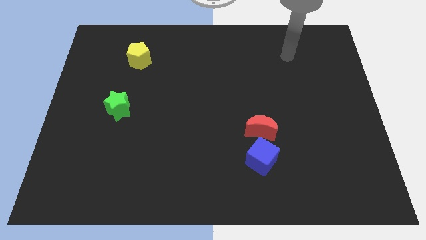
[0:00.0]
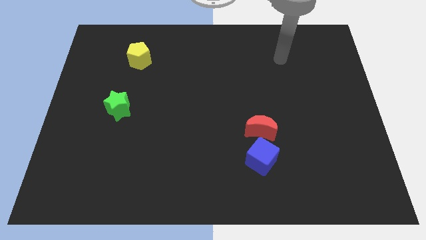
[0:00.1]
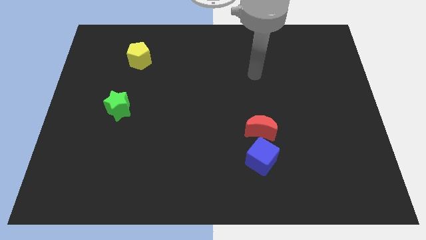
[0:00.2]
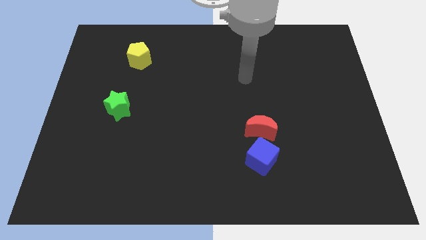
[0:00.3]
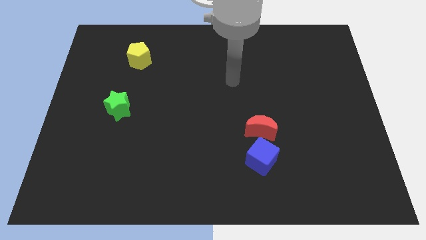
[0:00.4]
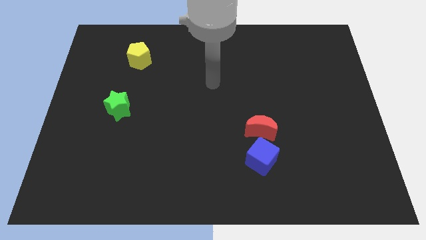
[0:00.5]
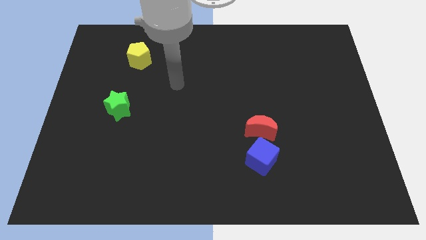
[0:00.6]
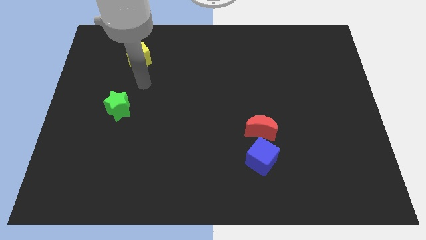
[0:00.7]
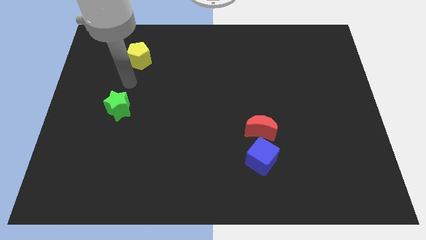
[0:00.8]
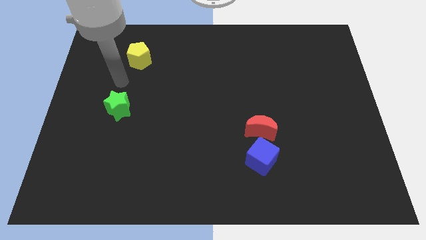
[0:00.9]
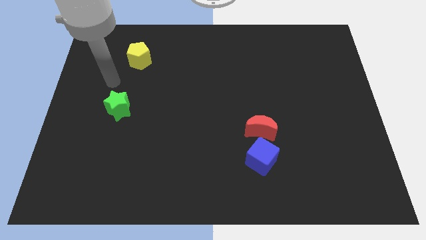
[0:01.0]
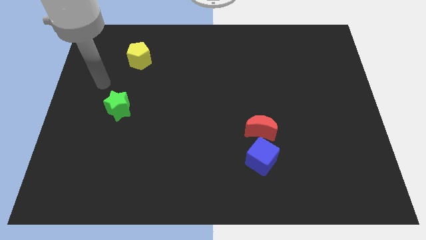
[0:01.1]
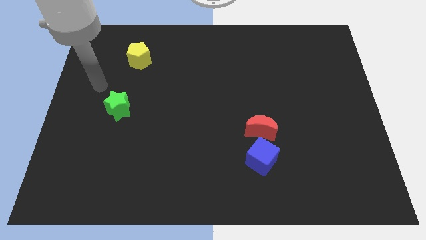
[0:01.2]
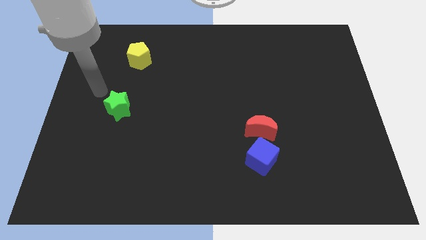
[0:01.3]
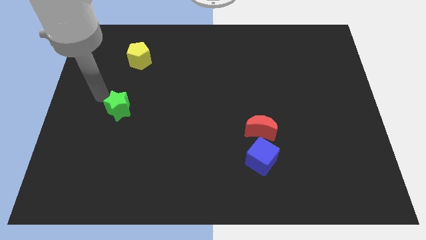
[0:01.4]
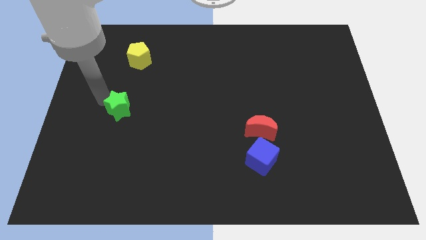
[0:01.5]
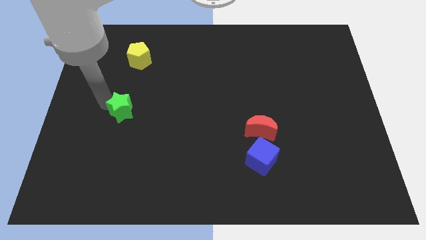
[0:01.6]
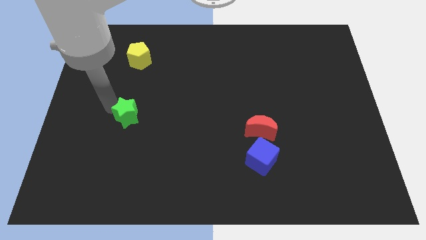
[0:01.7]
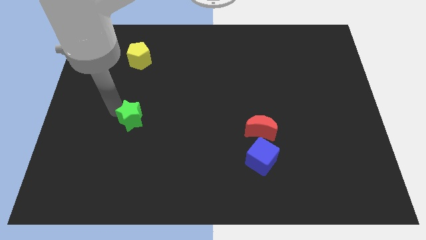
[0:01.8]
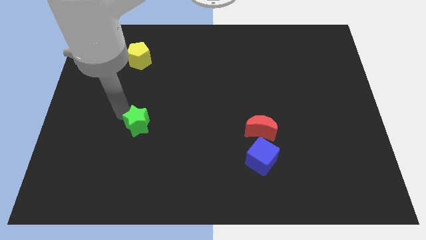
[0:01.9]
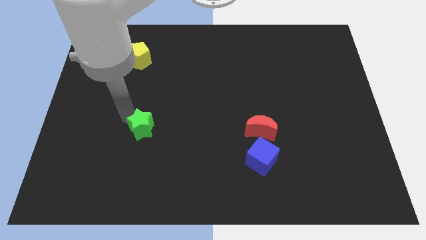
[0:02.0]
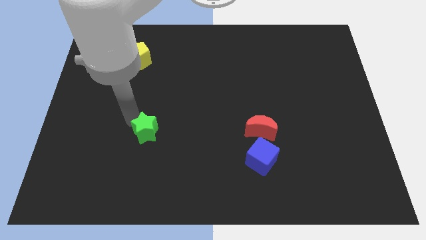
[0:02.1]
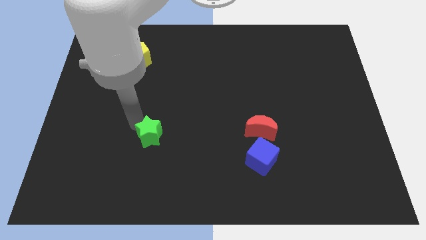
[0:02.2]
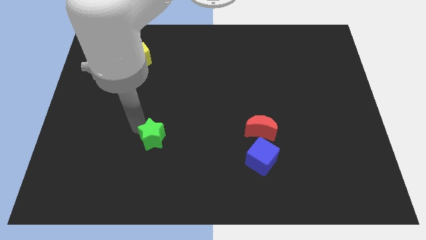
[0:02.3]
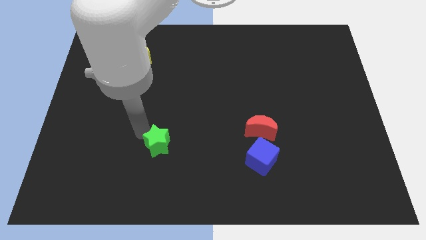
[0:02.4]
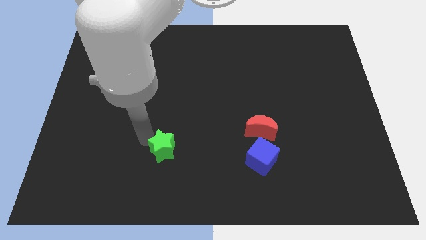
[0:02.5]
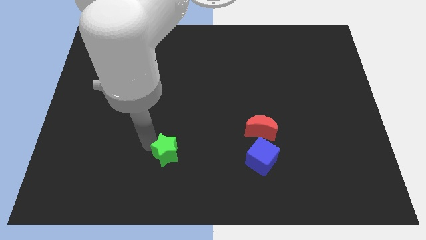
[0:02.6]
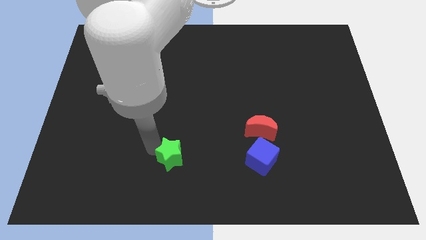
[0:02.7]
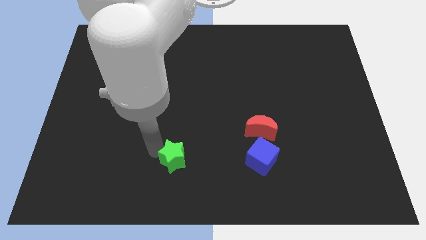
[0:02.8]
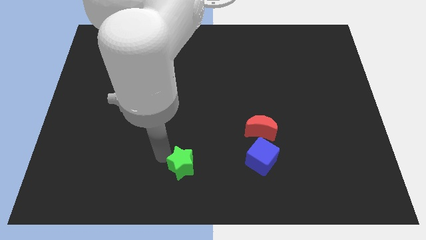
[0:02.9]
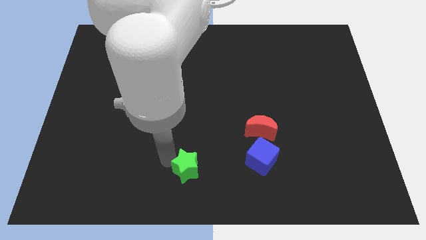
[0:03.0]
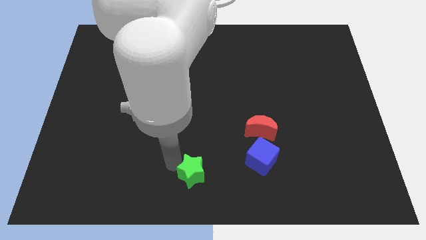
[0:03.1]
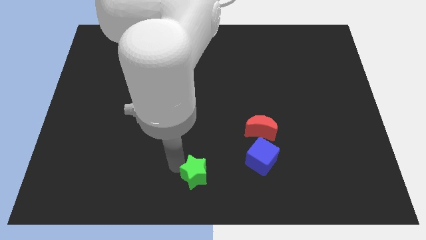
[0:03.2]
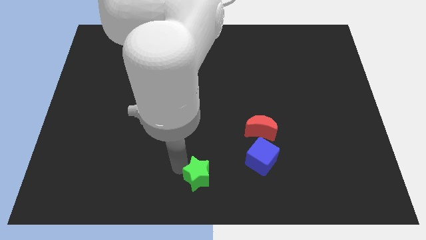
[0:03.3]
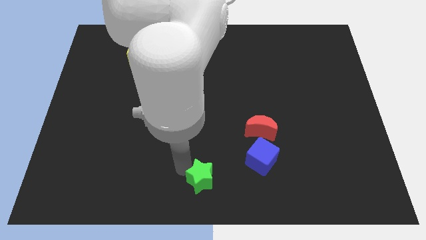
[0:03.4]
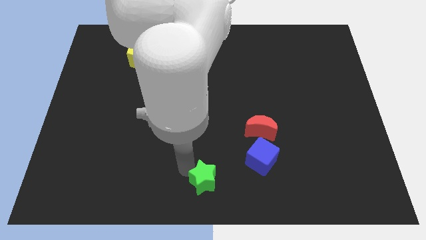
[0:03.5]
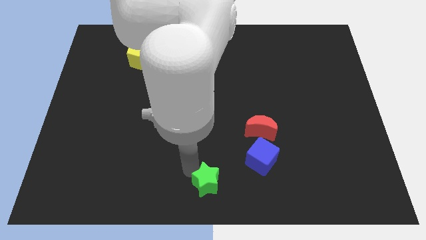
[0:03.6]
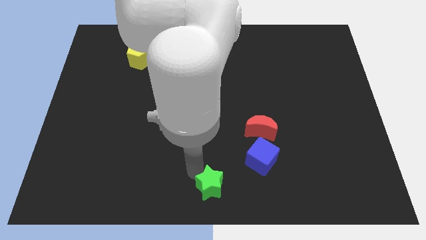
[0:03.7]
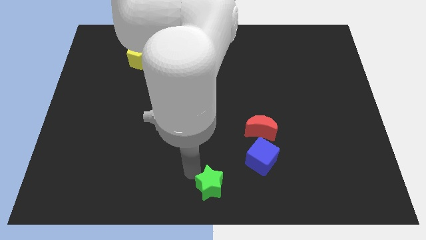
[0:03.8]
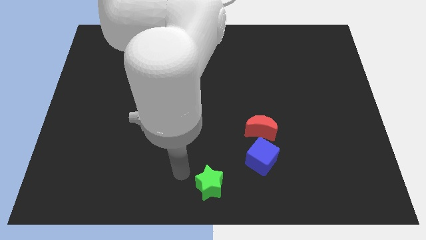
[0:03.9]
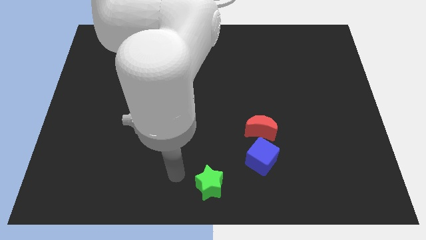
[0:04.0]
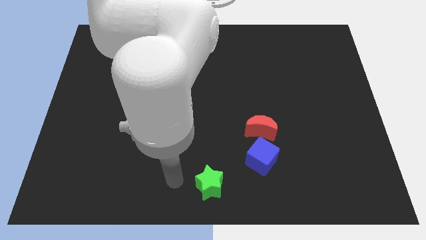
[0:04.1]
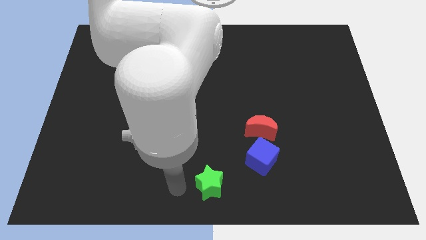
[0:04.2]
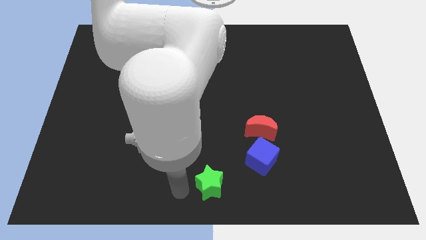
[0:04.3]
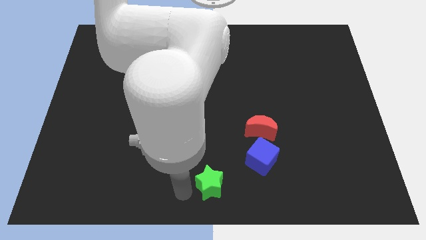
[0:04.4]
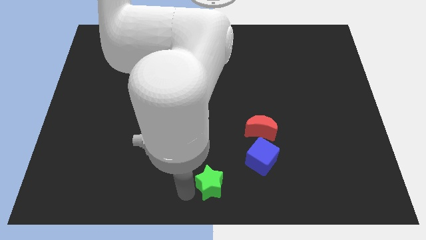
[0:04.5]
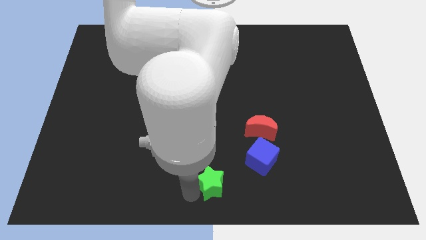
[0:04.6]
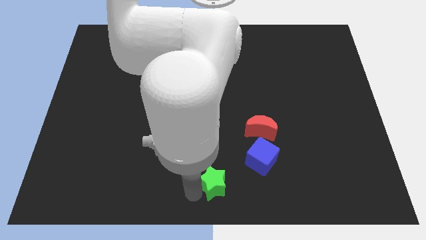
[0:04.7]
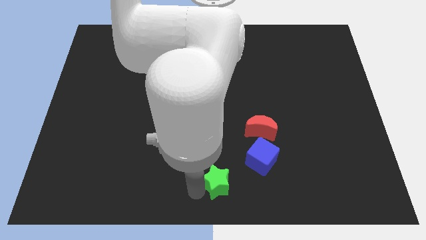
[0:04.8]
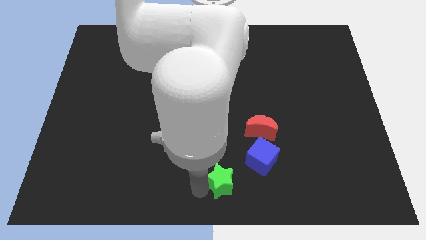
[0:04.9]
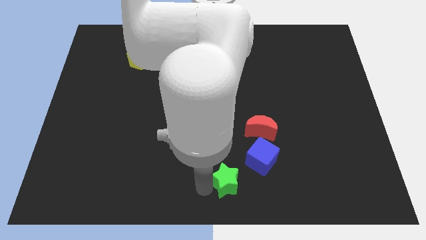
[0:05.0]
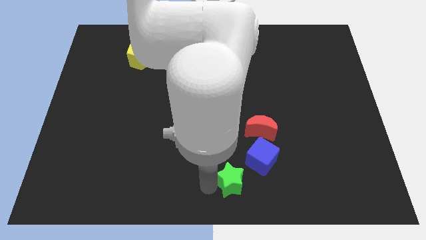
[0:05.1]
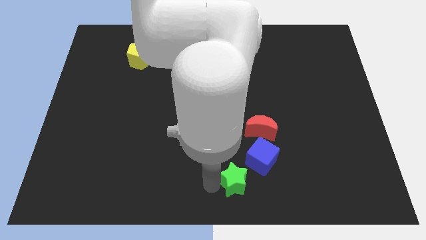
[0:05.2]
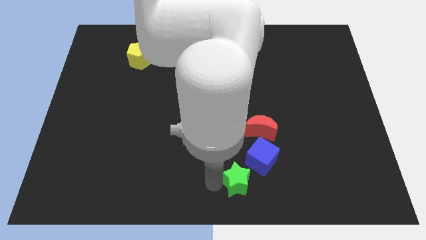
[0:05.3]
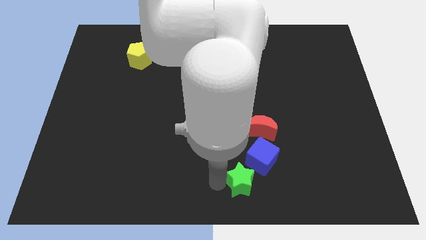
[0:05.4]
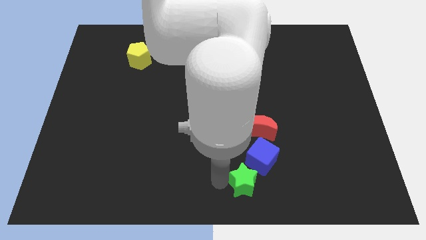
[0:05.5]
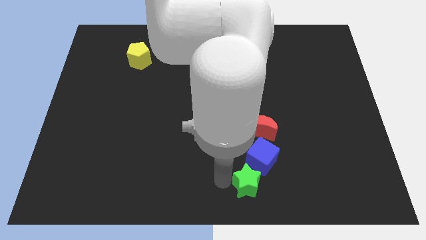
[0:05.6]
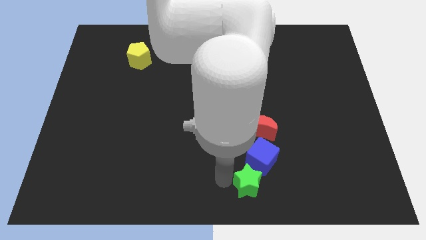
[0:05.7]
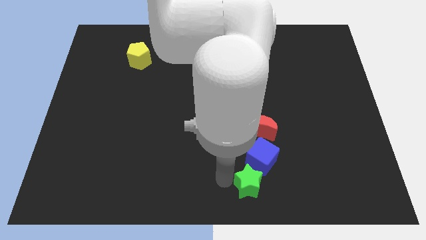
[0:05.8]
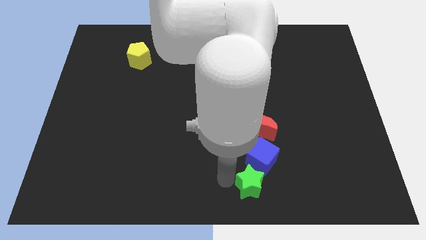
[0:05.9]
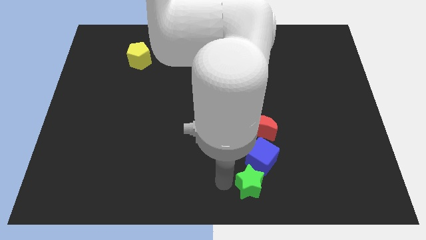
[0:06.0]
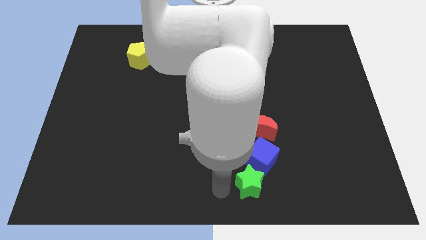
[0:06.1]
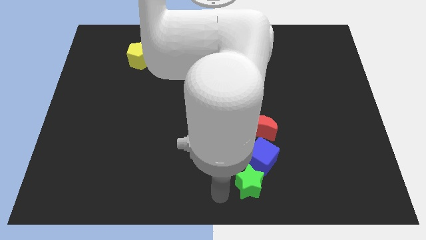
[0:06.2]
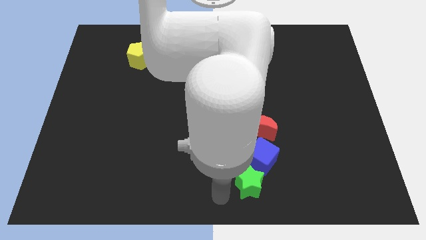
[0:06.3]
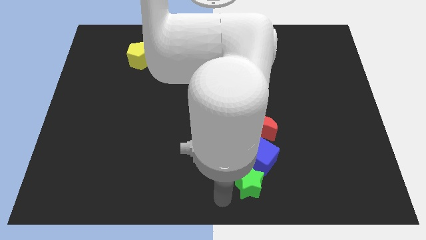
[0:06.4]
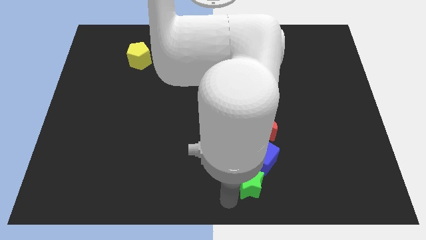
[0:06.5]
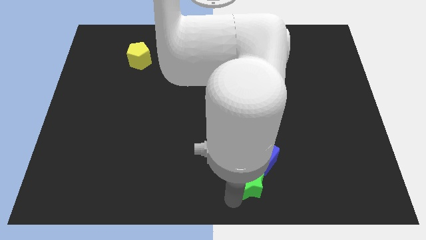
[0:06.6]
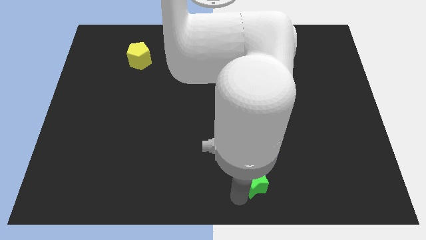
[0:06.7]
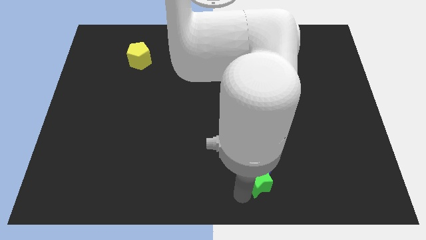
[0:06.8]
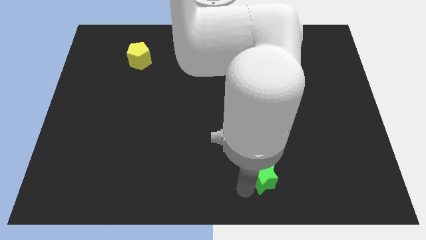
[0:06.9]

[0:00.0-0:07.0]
push the star close to the blue cube

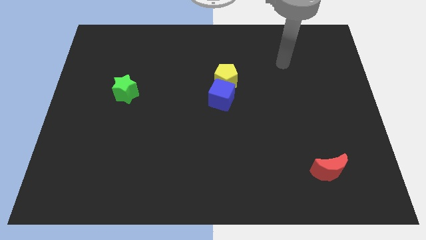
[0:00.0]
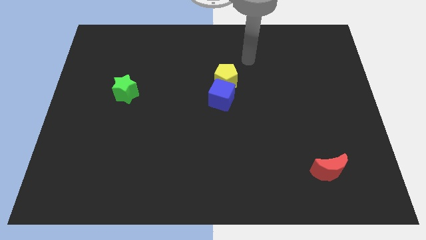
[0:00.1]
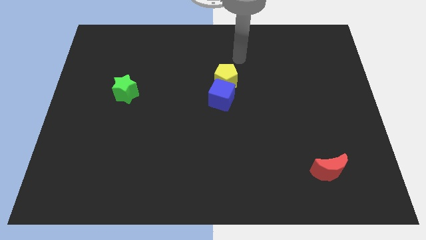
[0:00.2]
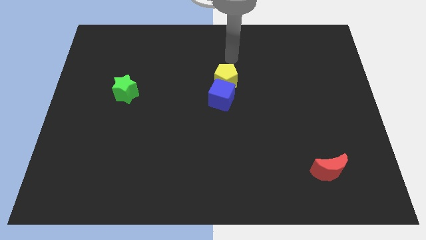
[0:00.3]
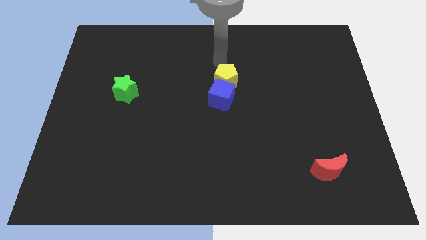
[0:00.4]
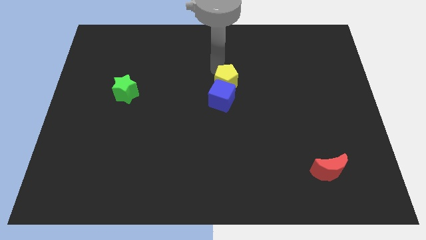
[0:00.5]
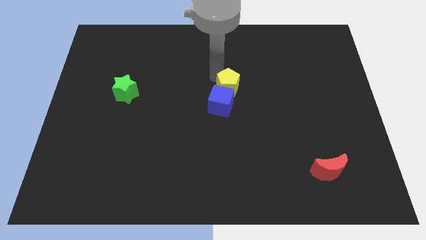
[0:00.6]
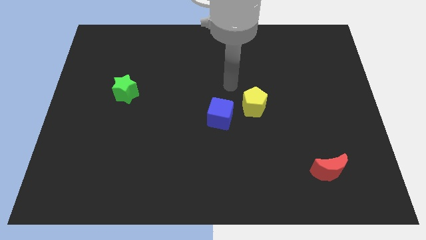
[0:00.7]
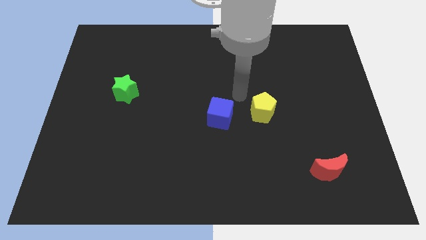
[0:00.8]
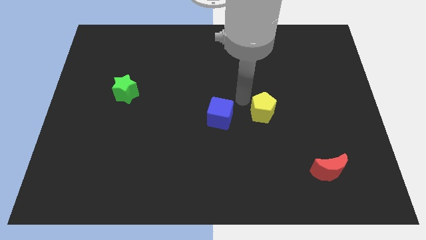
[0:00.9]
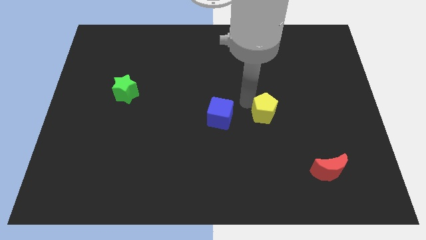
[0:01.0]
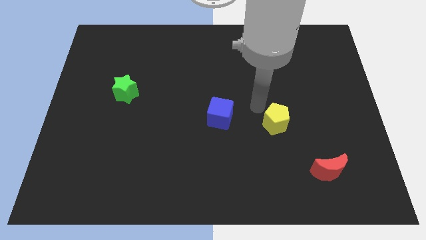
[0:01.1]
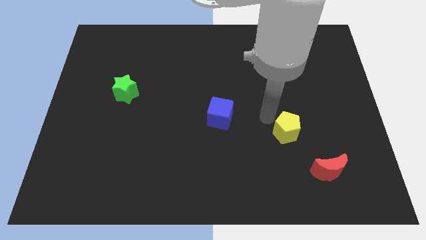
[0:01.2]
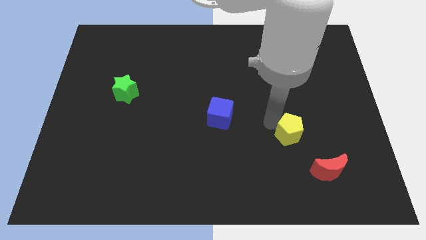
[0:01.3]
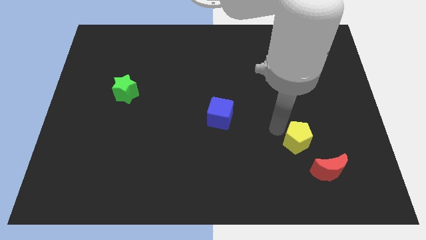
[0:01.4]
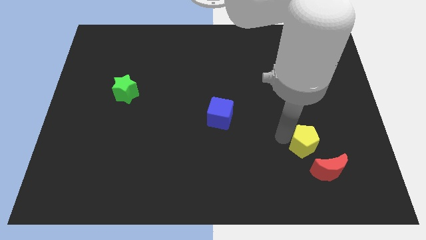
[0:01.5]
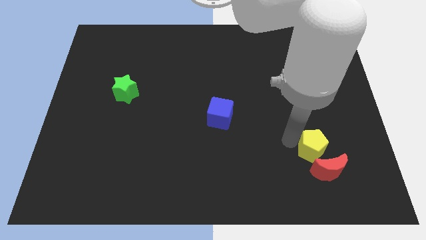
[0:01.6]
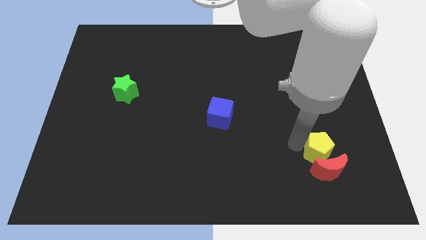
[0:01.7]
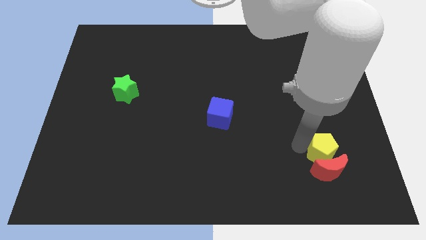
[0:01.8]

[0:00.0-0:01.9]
put the pentagon to the moon
